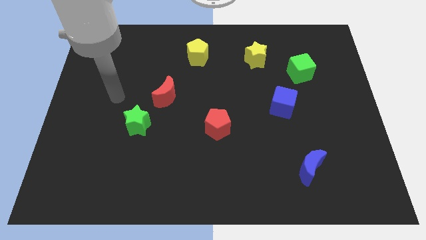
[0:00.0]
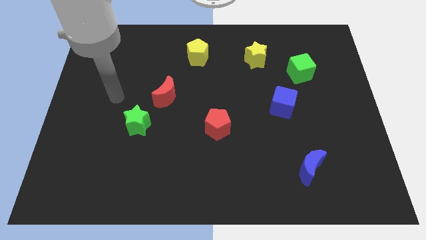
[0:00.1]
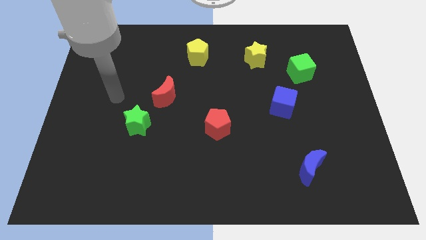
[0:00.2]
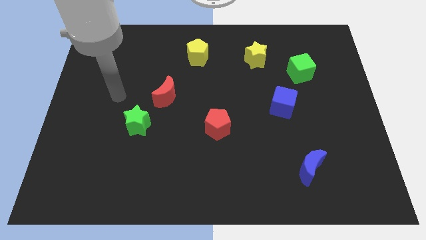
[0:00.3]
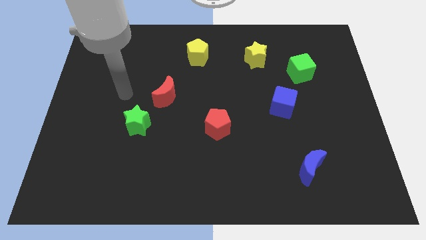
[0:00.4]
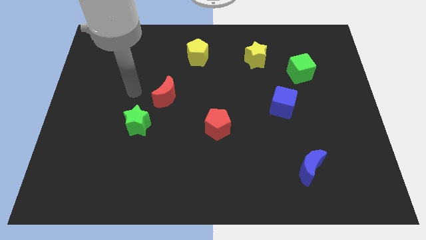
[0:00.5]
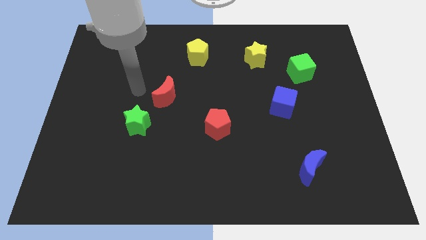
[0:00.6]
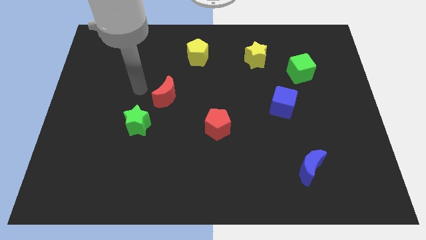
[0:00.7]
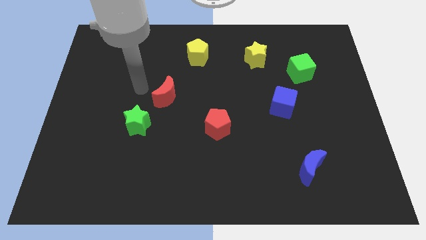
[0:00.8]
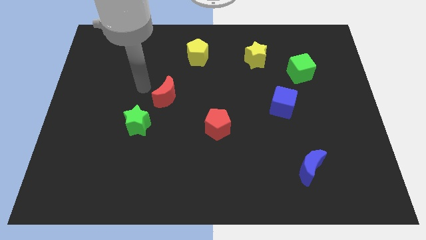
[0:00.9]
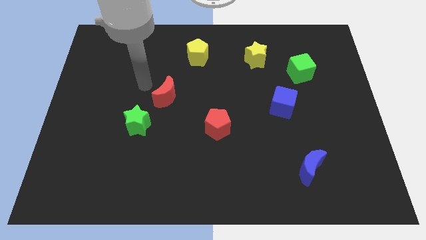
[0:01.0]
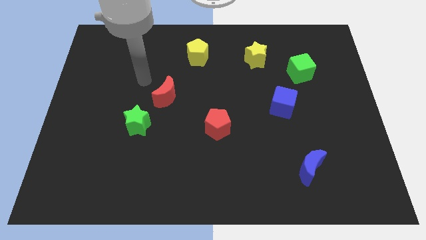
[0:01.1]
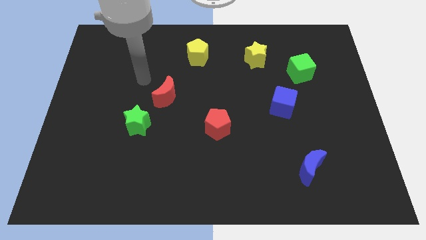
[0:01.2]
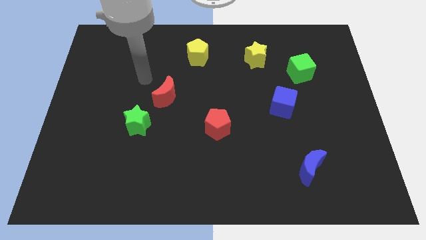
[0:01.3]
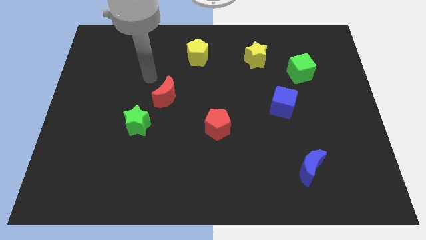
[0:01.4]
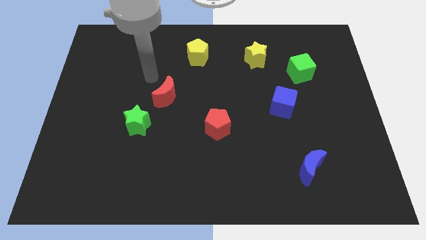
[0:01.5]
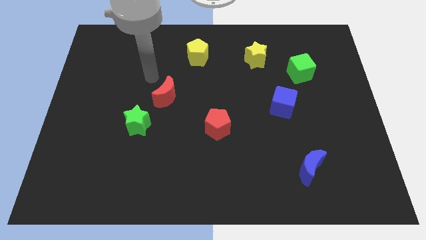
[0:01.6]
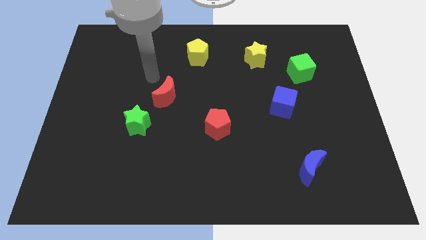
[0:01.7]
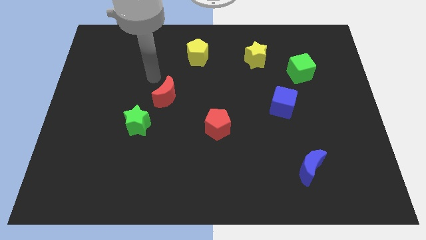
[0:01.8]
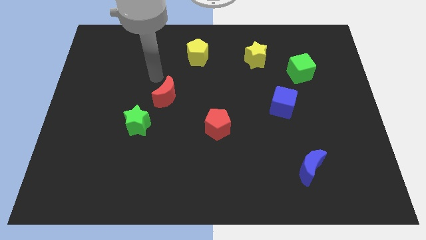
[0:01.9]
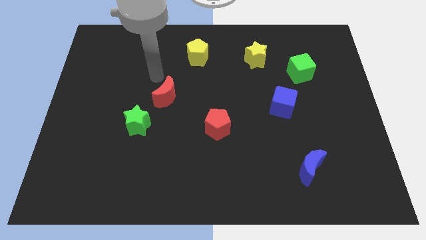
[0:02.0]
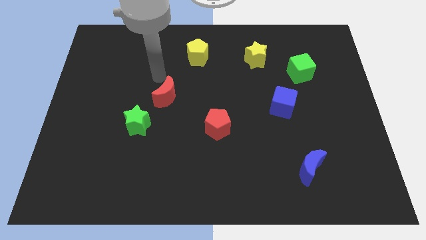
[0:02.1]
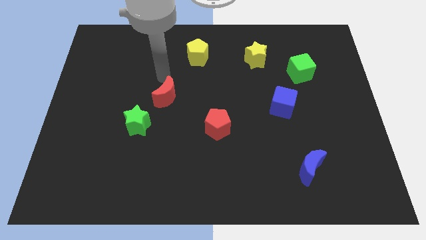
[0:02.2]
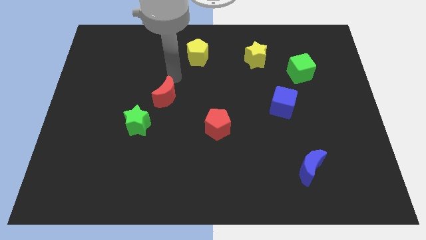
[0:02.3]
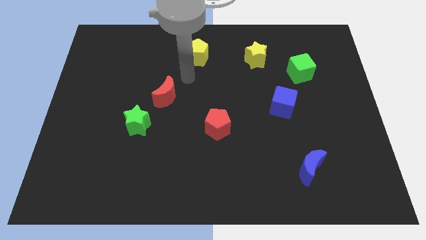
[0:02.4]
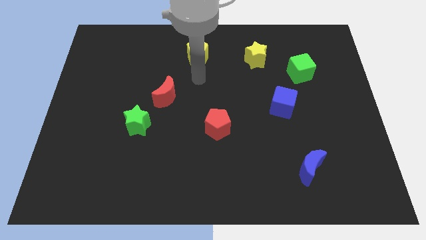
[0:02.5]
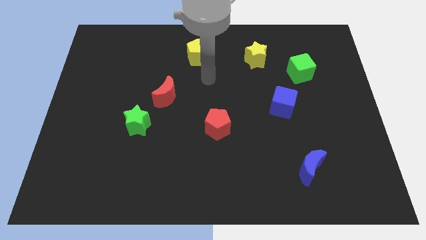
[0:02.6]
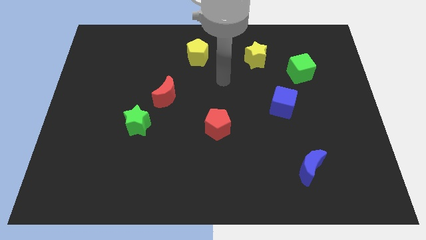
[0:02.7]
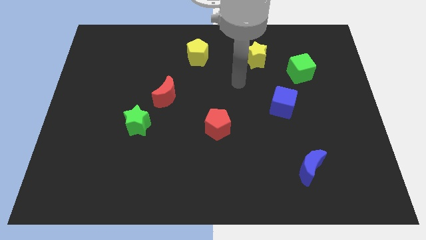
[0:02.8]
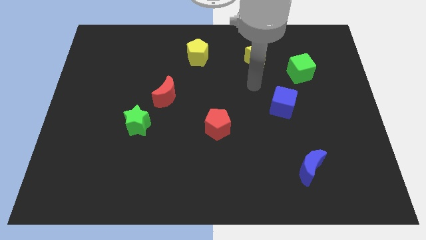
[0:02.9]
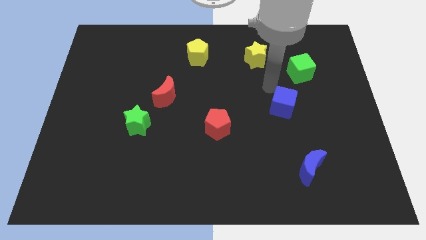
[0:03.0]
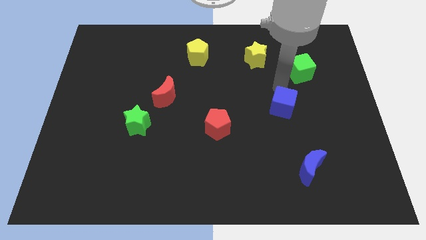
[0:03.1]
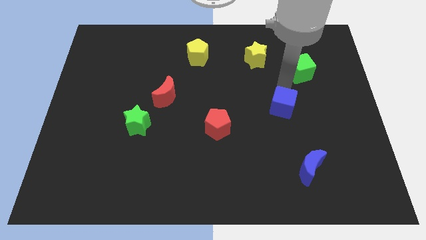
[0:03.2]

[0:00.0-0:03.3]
move your arm to the top of the blue cube

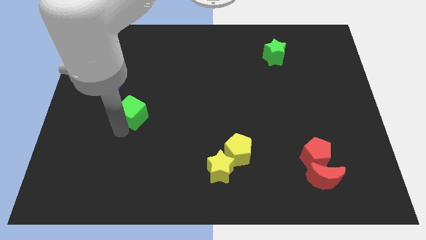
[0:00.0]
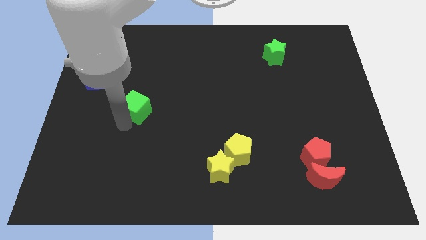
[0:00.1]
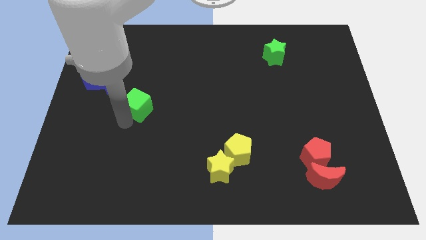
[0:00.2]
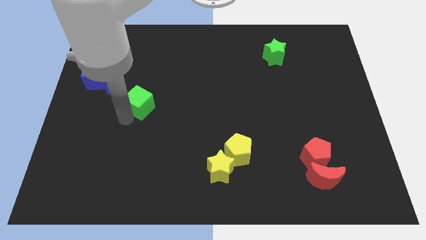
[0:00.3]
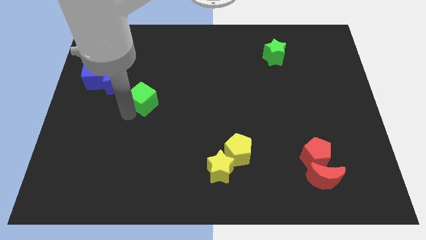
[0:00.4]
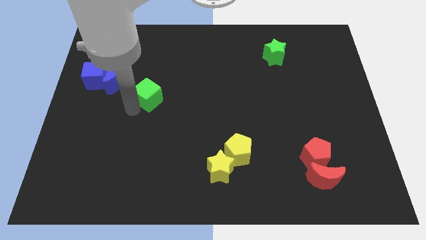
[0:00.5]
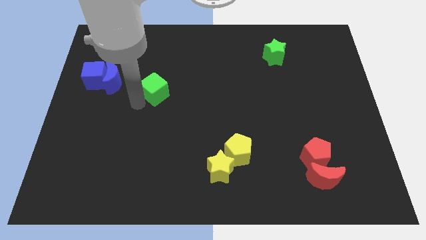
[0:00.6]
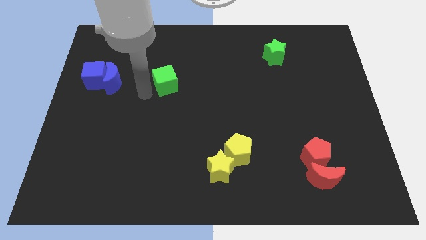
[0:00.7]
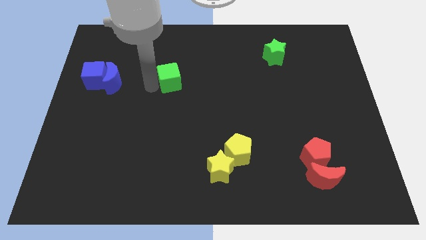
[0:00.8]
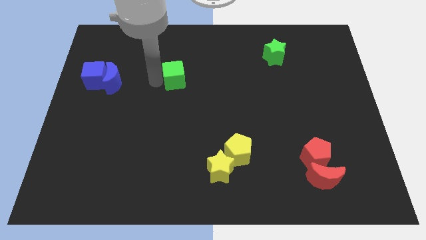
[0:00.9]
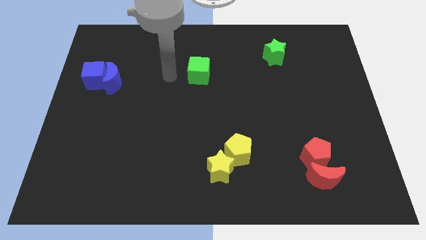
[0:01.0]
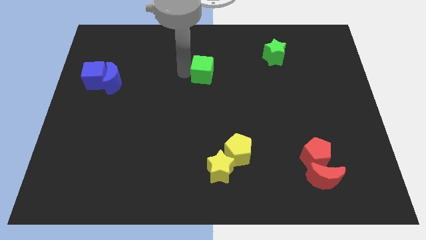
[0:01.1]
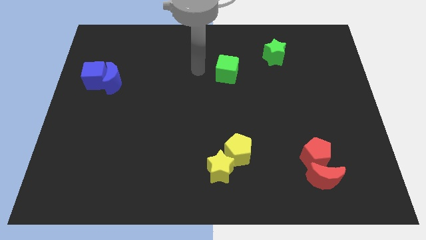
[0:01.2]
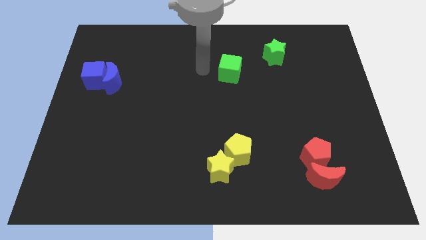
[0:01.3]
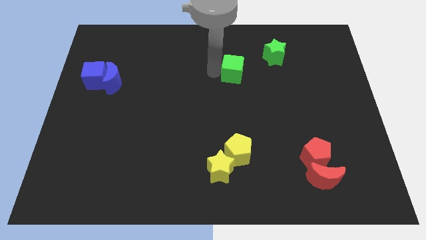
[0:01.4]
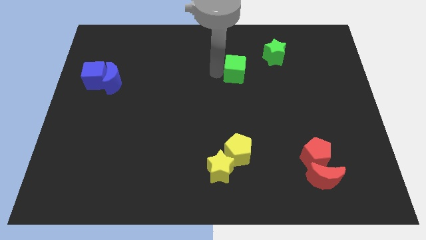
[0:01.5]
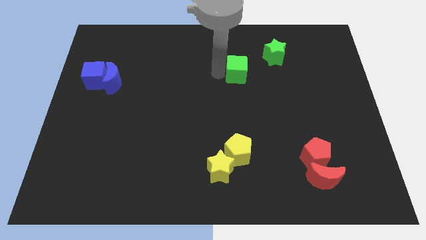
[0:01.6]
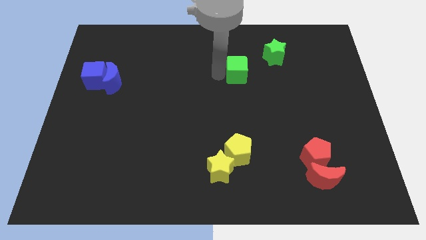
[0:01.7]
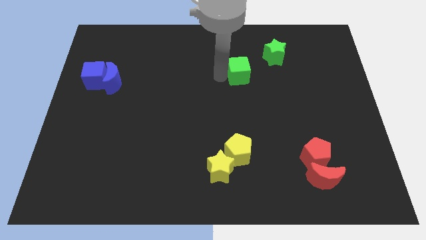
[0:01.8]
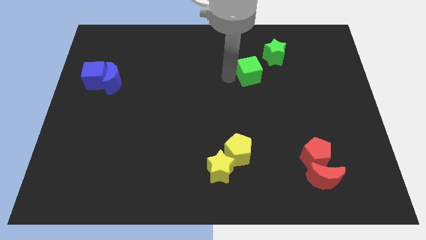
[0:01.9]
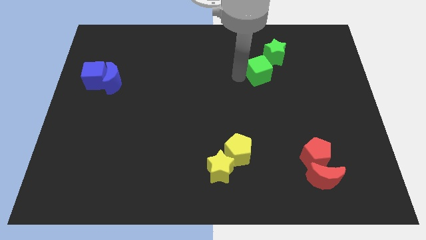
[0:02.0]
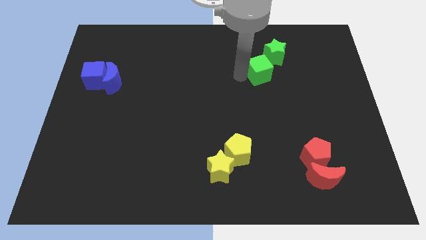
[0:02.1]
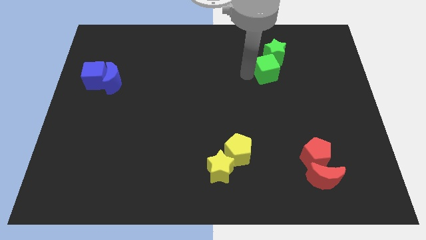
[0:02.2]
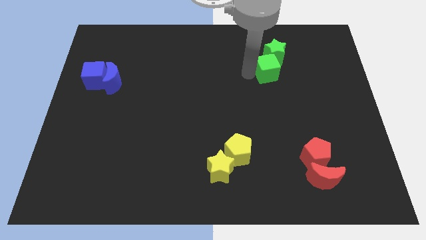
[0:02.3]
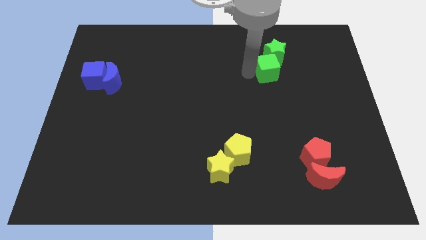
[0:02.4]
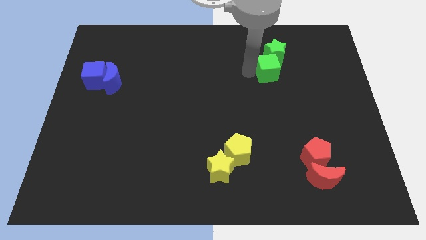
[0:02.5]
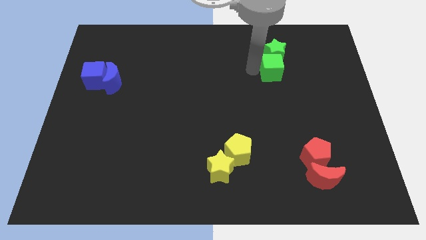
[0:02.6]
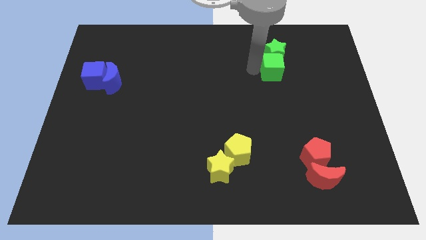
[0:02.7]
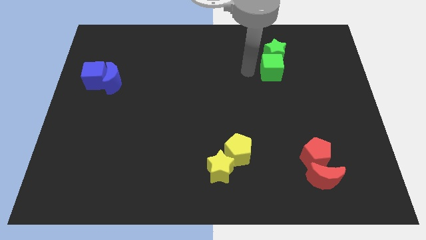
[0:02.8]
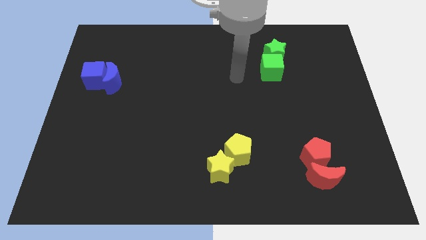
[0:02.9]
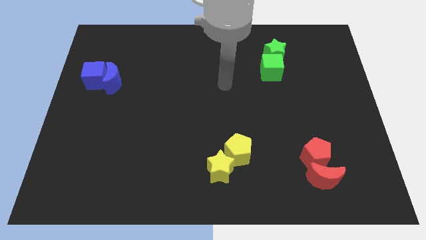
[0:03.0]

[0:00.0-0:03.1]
place the green cube down to the green star

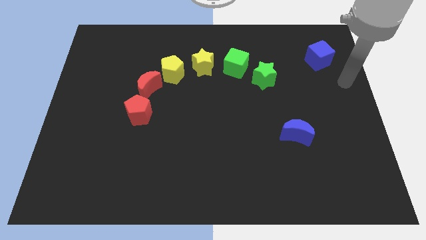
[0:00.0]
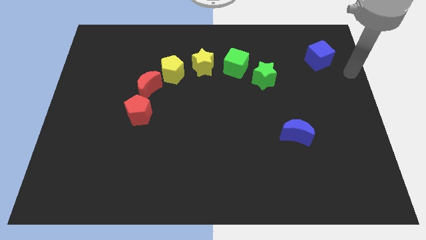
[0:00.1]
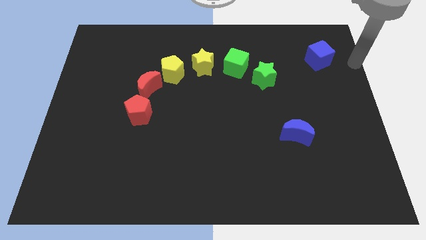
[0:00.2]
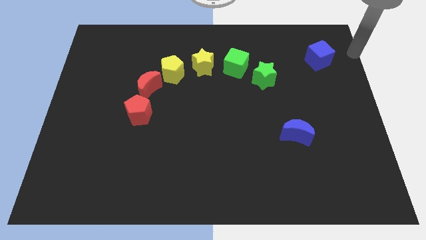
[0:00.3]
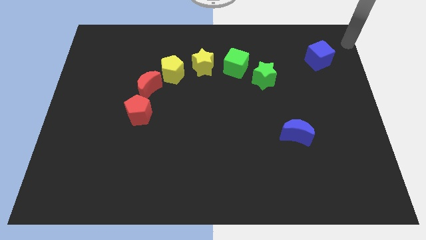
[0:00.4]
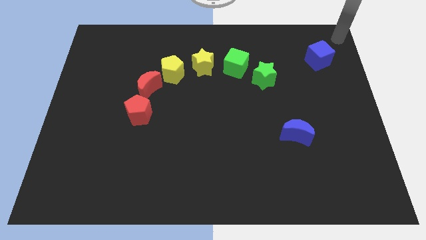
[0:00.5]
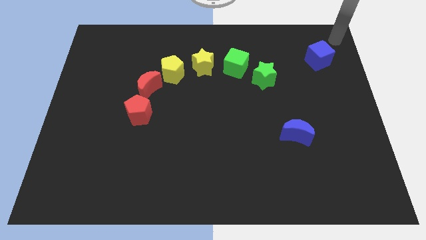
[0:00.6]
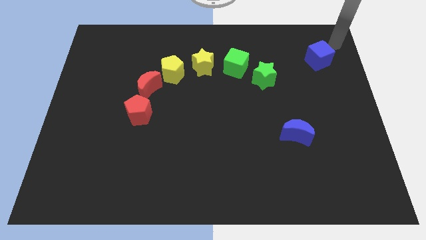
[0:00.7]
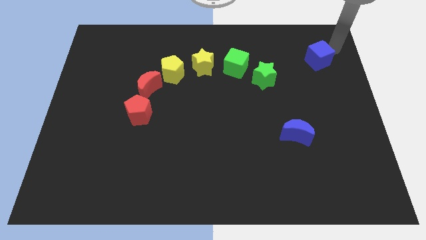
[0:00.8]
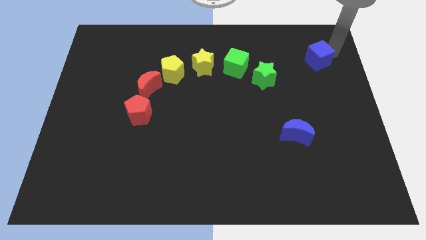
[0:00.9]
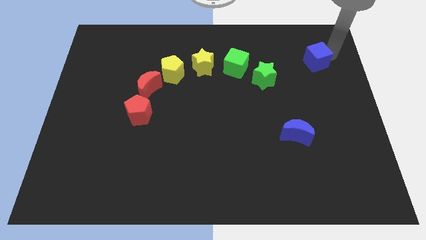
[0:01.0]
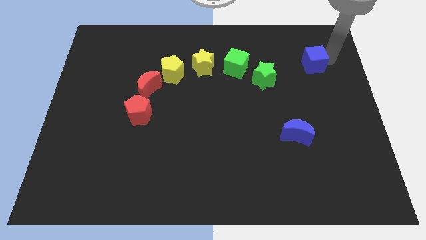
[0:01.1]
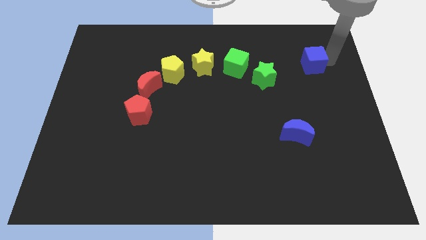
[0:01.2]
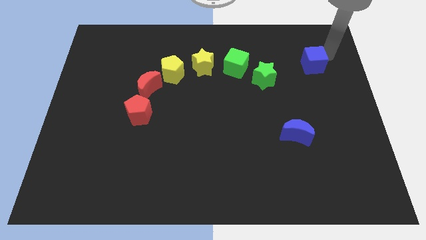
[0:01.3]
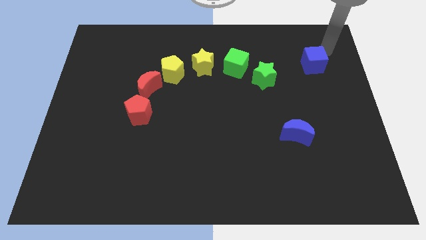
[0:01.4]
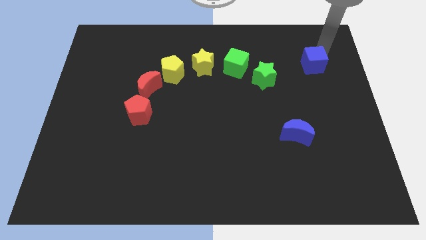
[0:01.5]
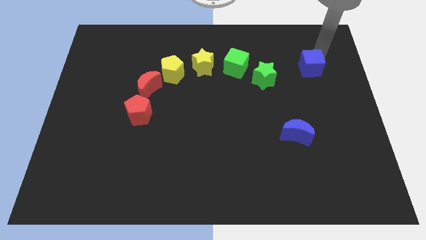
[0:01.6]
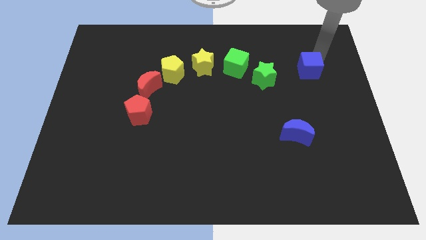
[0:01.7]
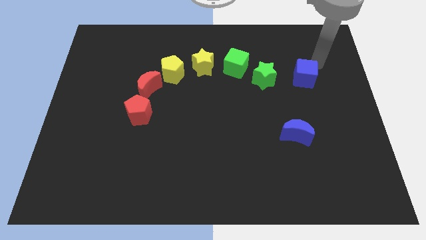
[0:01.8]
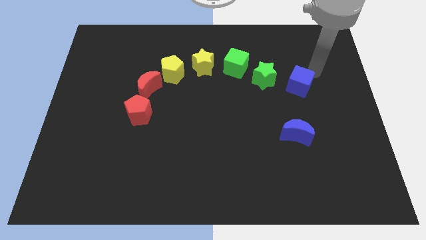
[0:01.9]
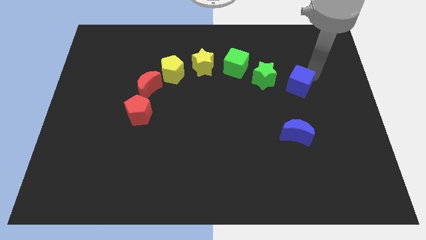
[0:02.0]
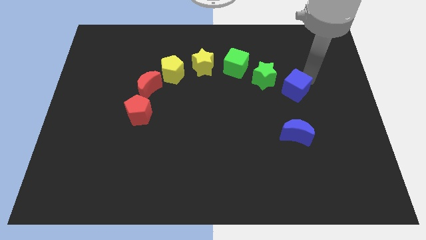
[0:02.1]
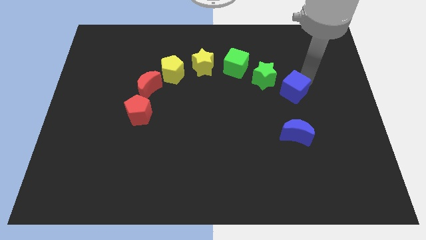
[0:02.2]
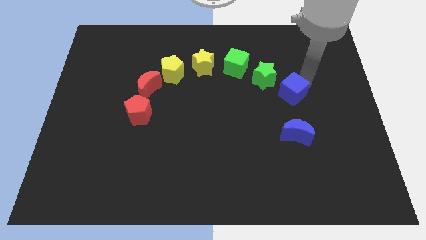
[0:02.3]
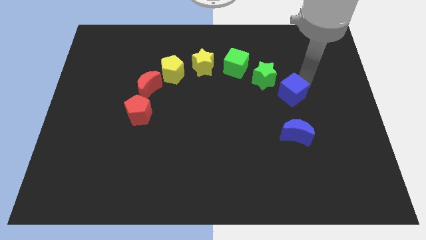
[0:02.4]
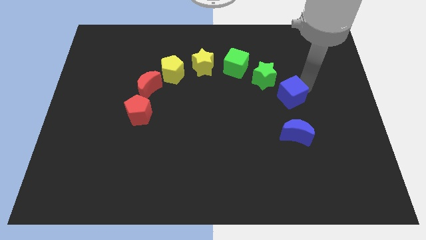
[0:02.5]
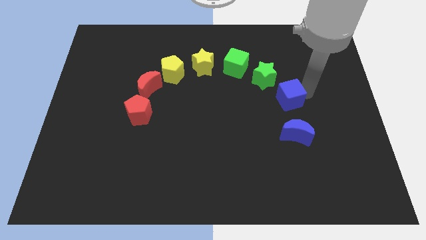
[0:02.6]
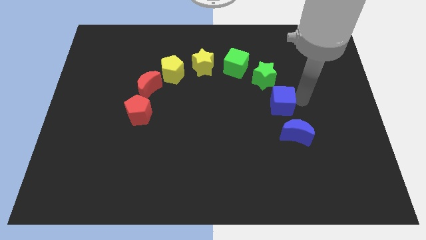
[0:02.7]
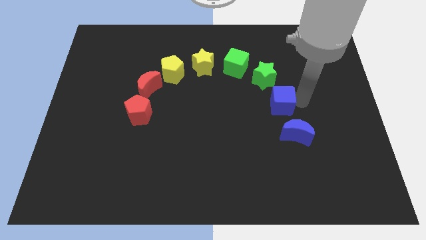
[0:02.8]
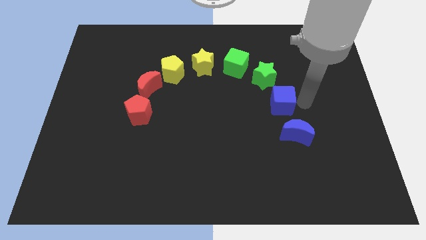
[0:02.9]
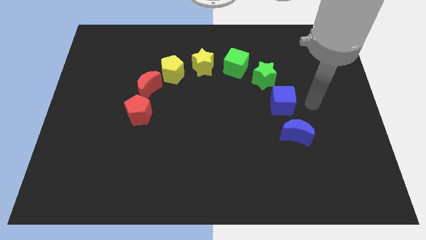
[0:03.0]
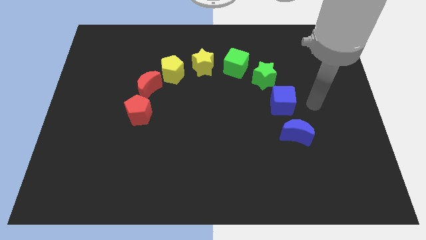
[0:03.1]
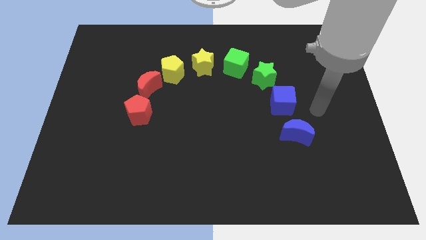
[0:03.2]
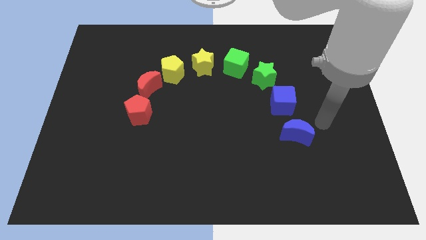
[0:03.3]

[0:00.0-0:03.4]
push the blue cube in between the green star and blue crescent
